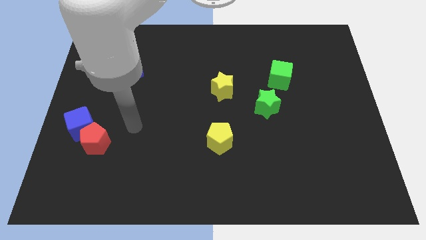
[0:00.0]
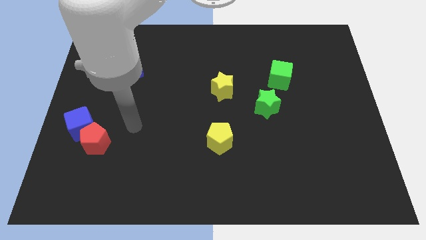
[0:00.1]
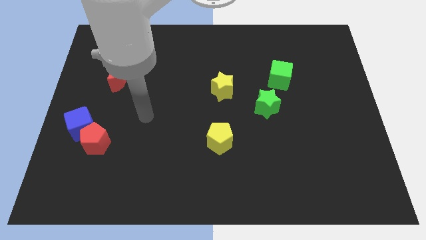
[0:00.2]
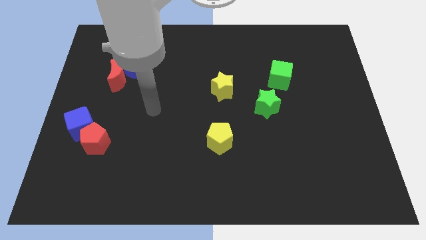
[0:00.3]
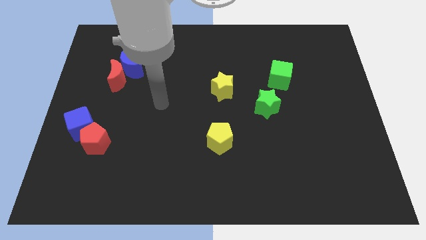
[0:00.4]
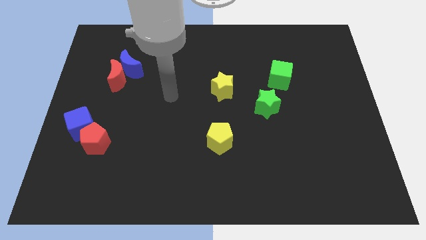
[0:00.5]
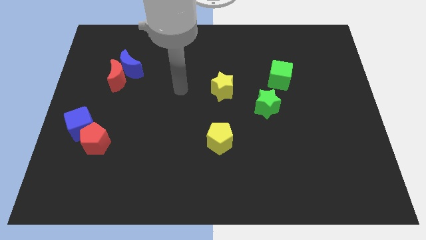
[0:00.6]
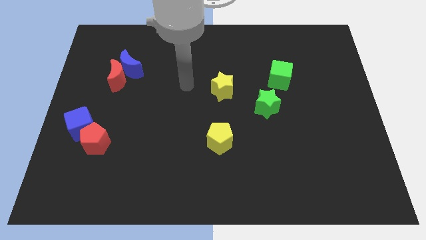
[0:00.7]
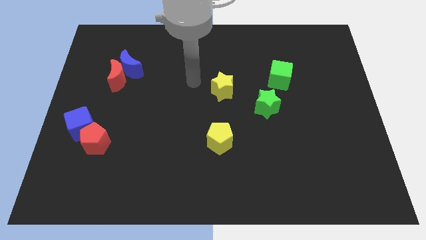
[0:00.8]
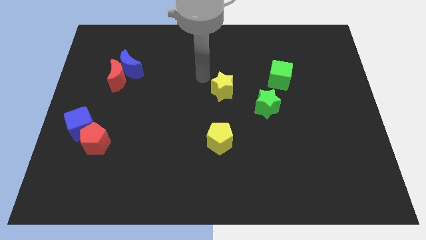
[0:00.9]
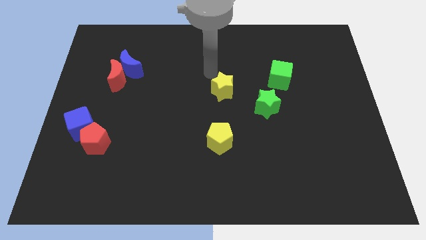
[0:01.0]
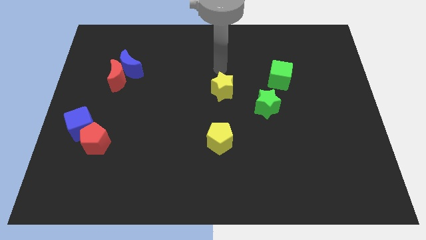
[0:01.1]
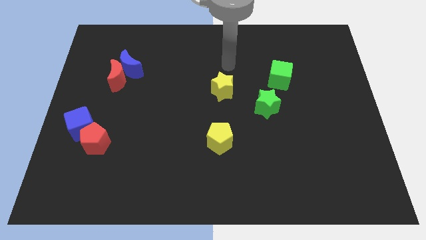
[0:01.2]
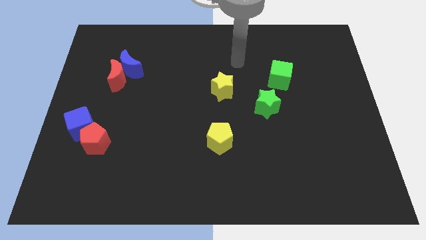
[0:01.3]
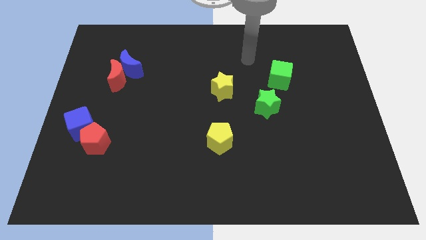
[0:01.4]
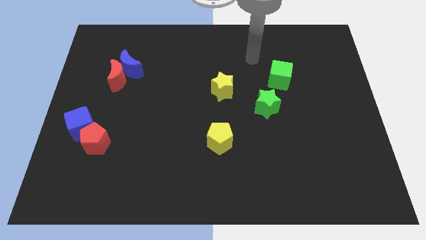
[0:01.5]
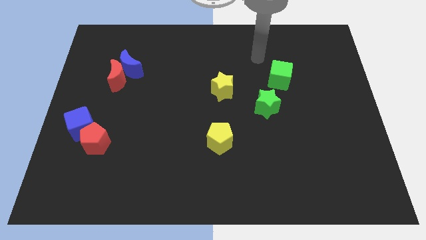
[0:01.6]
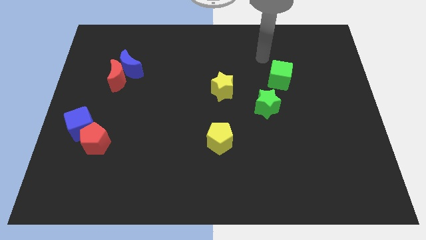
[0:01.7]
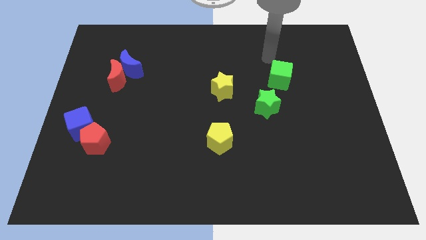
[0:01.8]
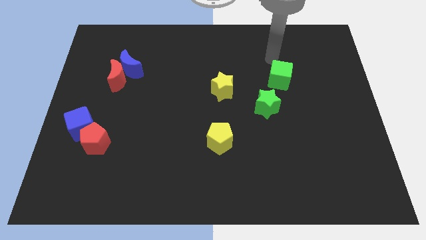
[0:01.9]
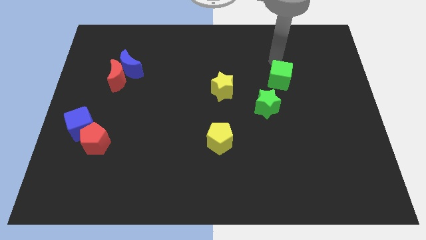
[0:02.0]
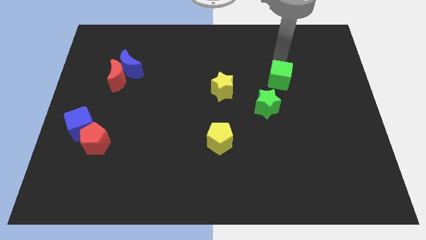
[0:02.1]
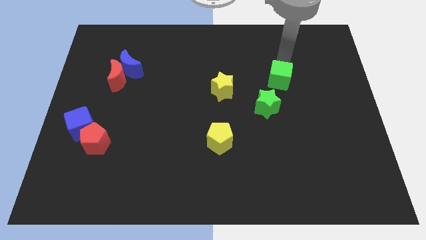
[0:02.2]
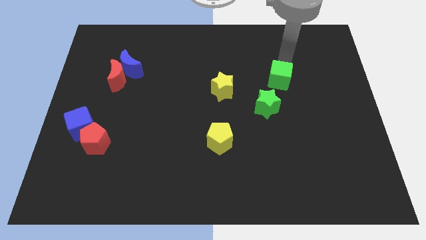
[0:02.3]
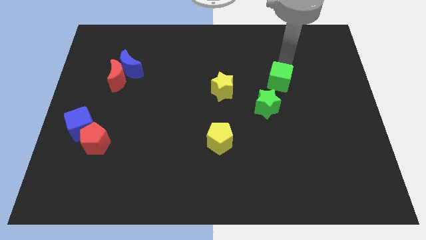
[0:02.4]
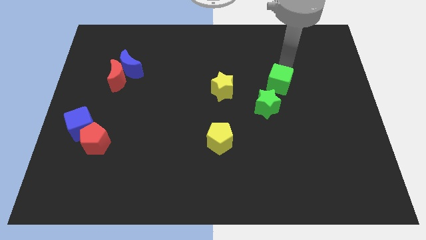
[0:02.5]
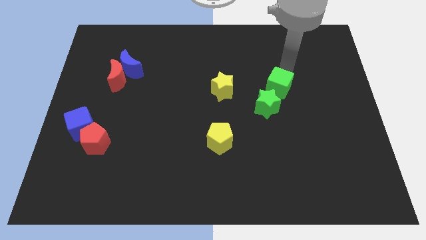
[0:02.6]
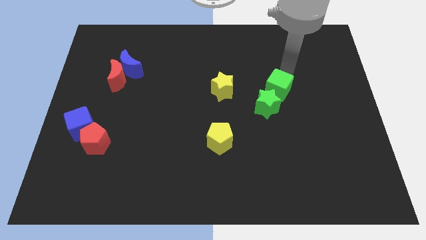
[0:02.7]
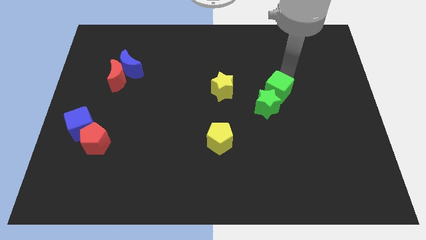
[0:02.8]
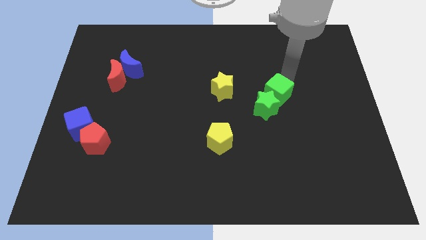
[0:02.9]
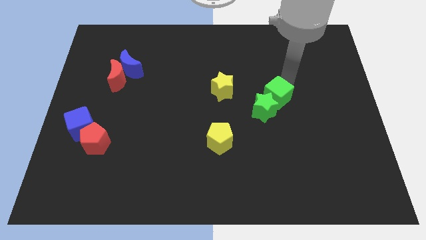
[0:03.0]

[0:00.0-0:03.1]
push the green cube close to the green star

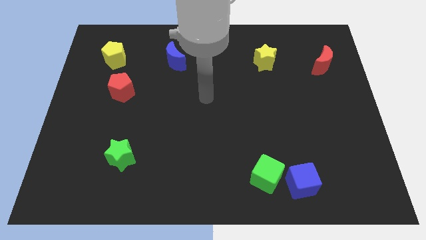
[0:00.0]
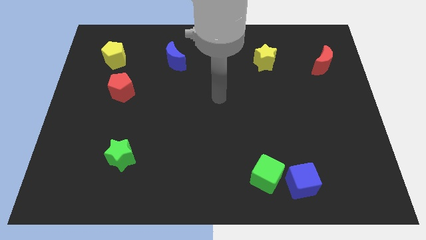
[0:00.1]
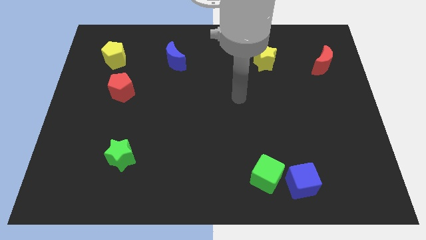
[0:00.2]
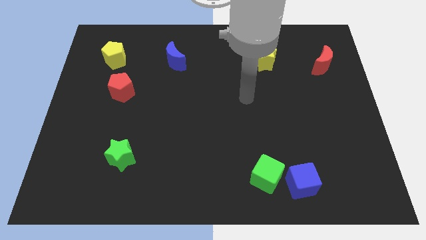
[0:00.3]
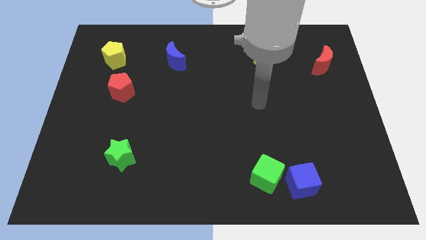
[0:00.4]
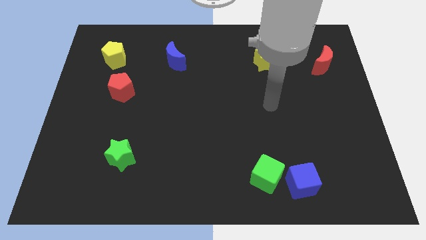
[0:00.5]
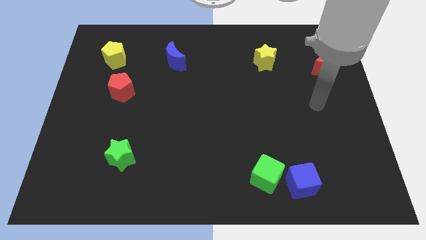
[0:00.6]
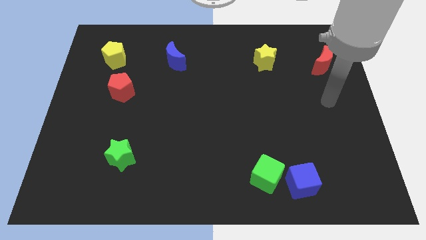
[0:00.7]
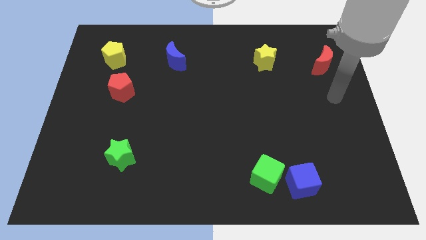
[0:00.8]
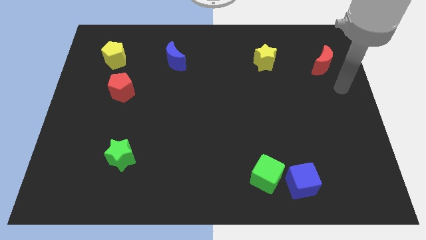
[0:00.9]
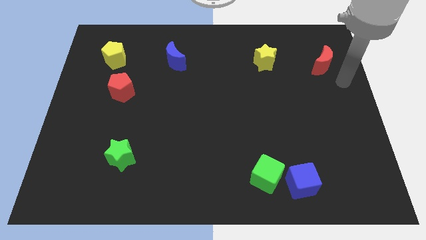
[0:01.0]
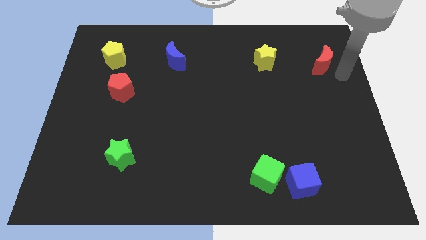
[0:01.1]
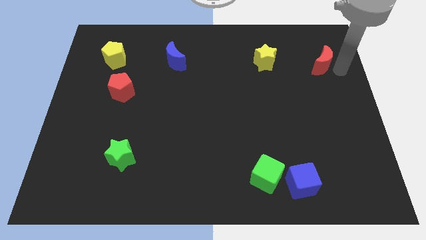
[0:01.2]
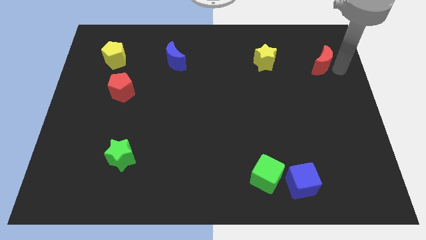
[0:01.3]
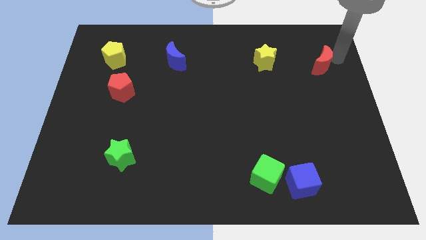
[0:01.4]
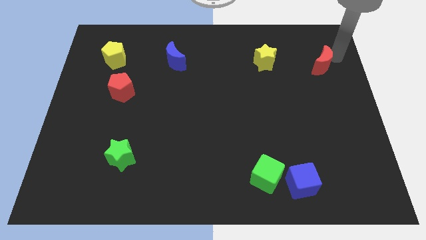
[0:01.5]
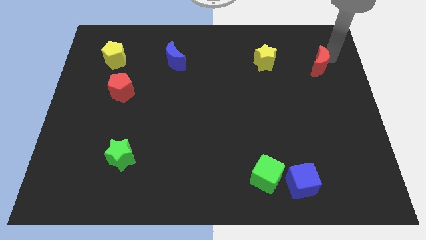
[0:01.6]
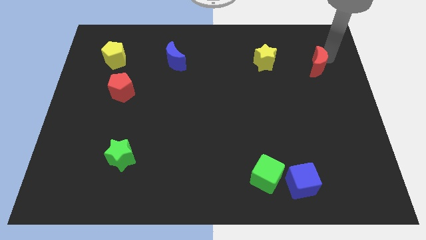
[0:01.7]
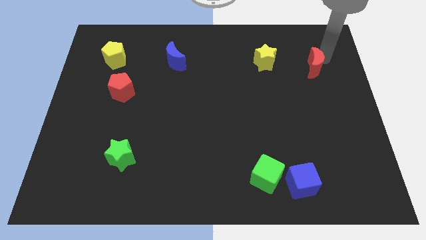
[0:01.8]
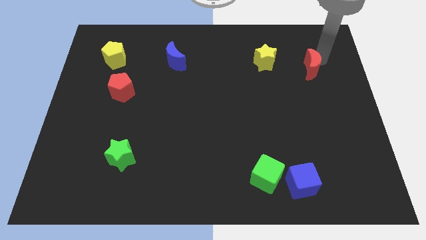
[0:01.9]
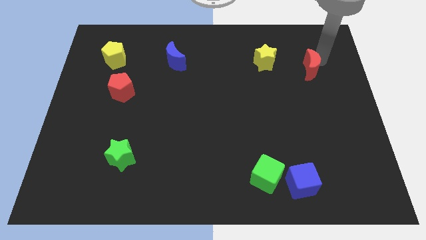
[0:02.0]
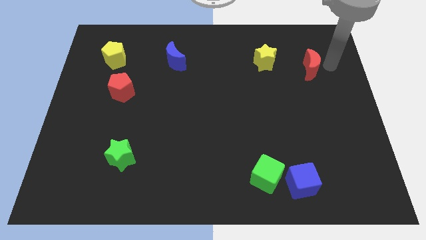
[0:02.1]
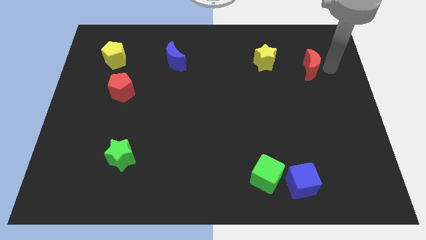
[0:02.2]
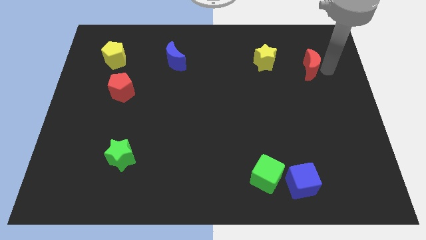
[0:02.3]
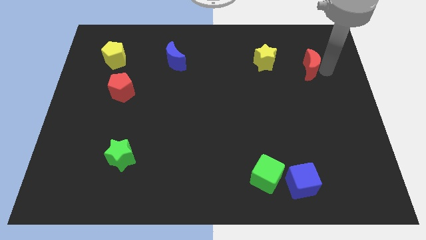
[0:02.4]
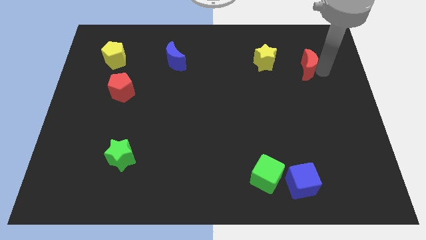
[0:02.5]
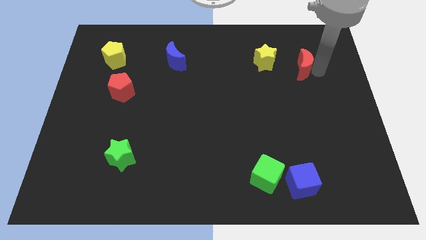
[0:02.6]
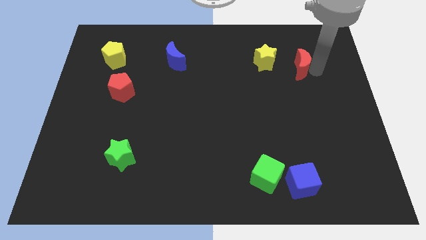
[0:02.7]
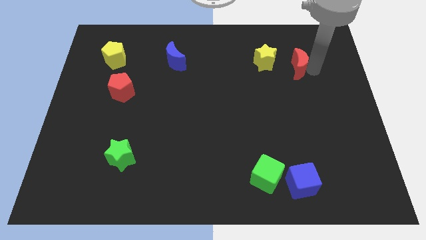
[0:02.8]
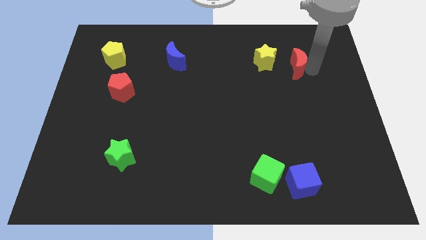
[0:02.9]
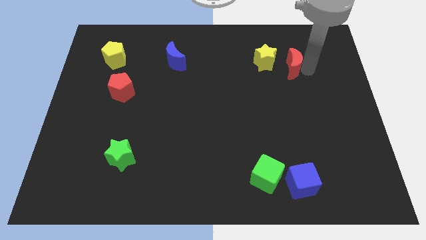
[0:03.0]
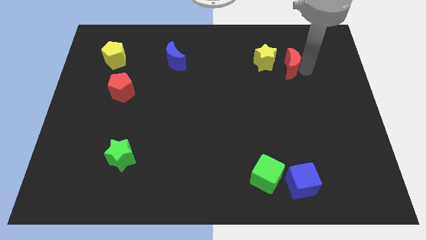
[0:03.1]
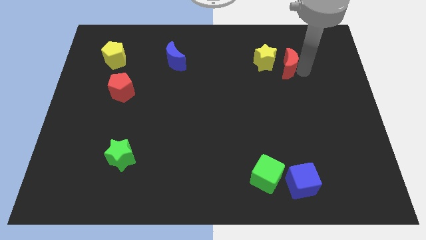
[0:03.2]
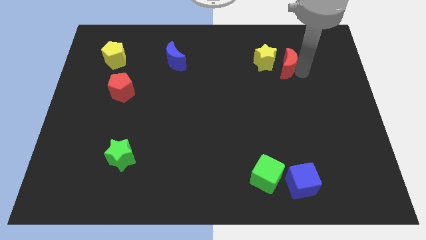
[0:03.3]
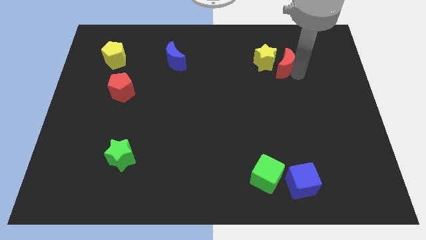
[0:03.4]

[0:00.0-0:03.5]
push the red moon to the yellow star

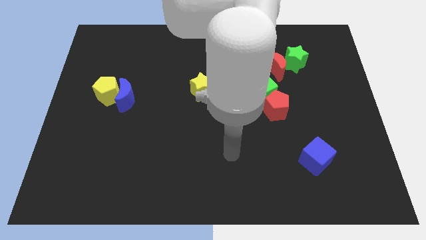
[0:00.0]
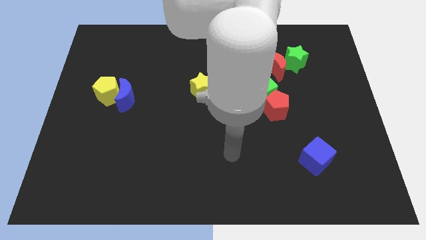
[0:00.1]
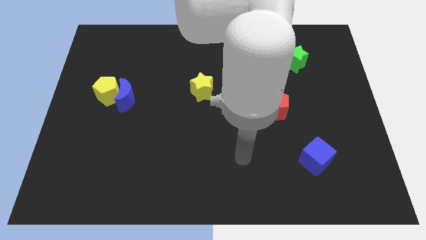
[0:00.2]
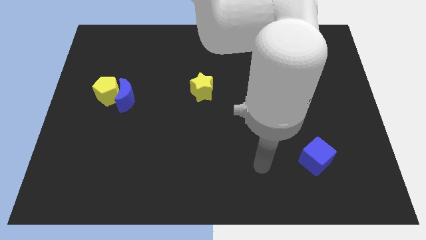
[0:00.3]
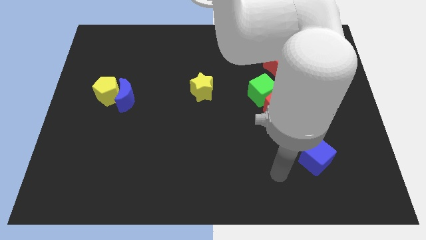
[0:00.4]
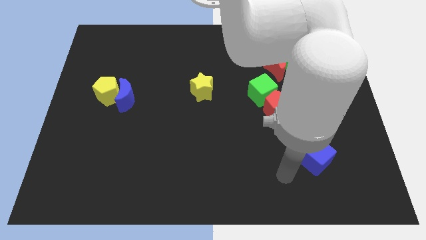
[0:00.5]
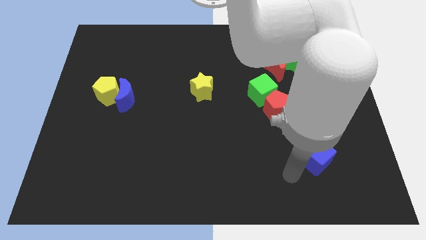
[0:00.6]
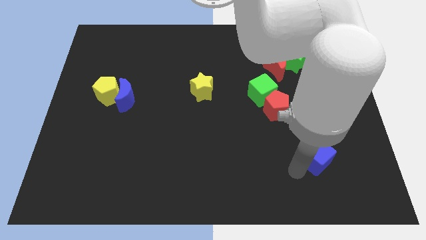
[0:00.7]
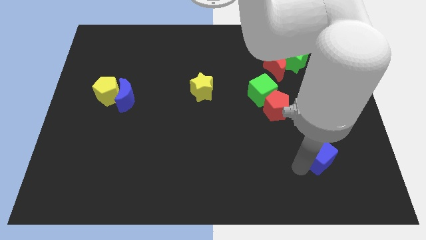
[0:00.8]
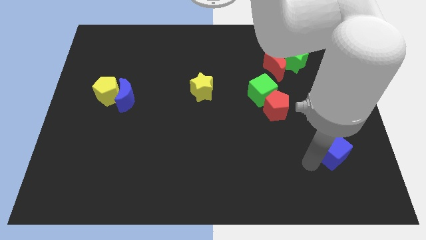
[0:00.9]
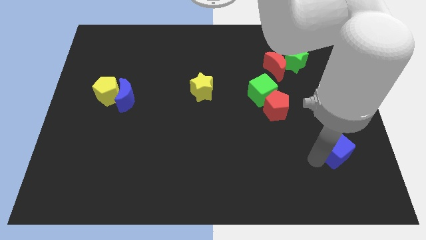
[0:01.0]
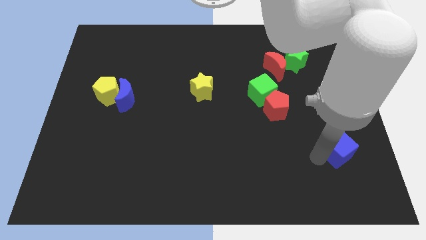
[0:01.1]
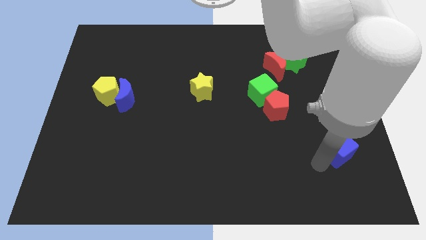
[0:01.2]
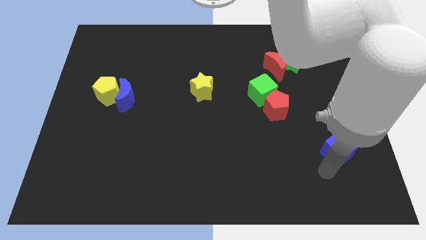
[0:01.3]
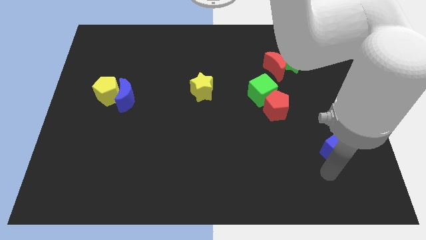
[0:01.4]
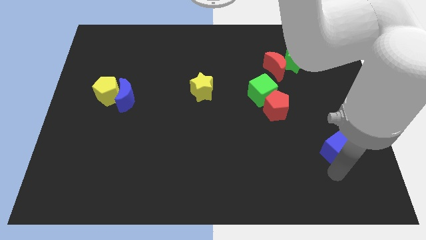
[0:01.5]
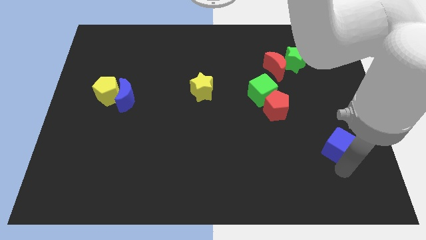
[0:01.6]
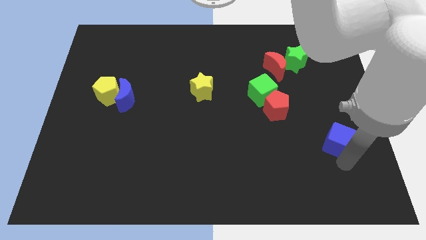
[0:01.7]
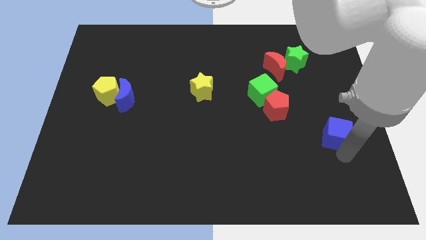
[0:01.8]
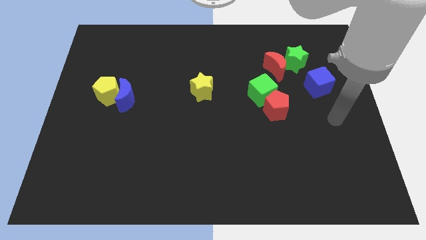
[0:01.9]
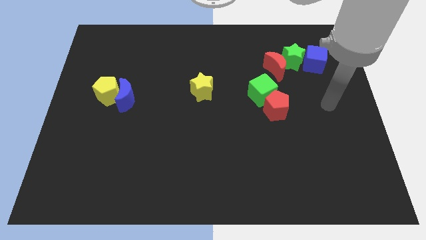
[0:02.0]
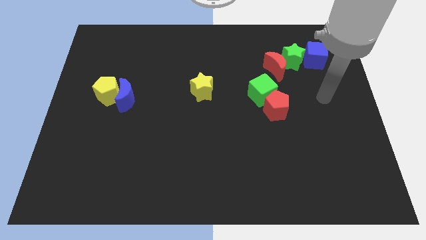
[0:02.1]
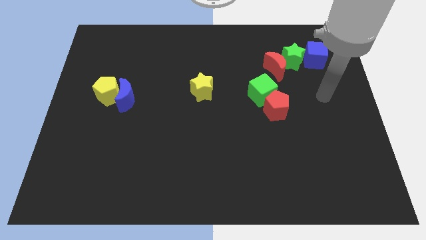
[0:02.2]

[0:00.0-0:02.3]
put the blue cube to the green star
